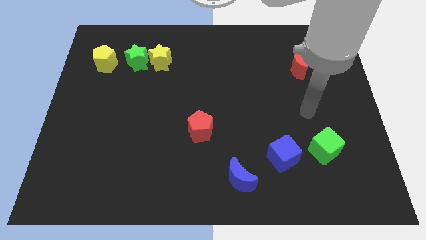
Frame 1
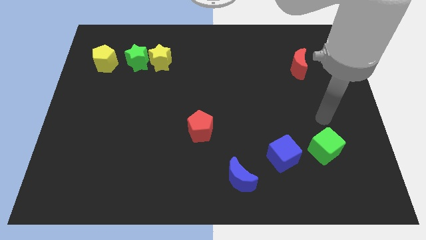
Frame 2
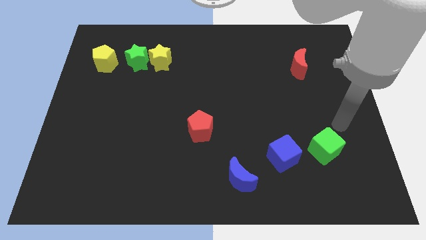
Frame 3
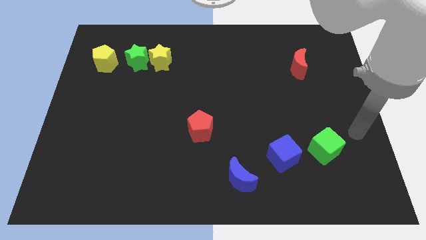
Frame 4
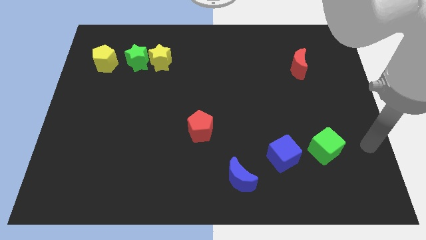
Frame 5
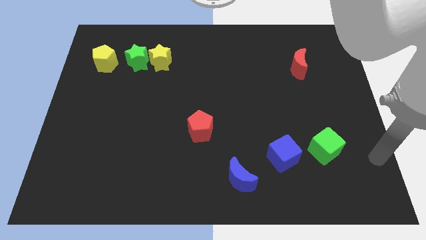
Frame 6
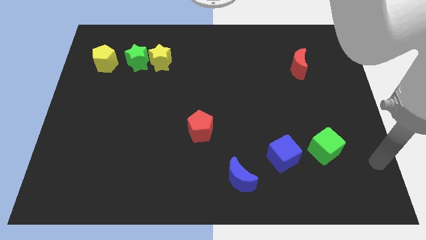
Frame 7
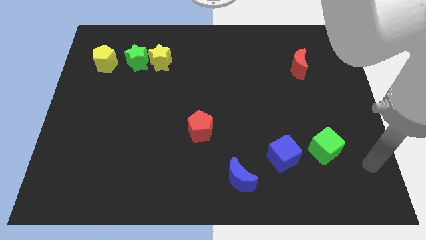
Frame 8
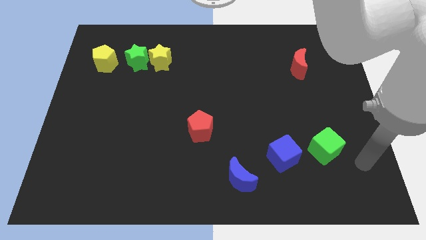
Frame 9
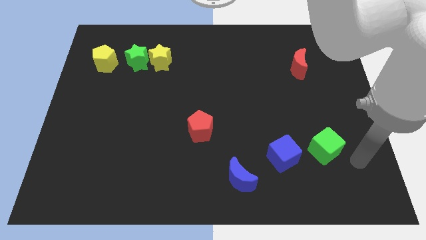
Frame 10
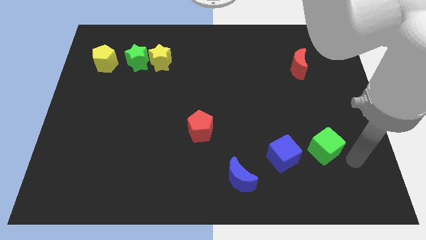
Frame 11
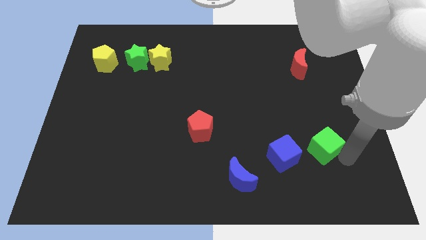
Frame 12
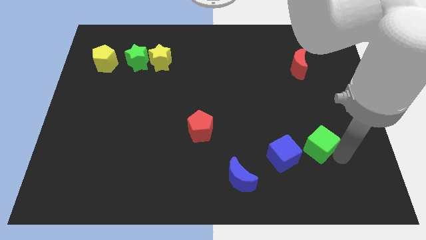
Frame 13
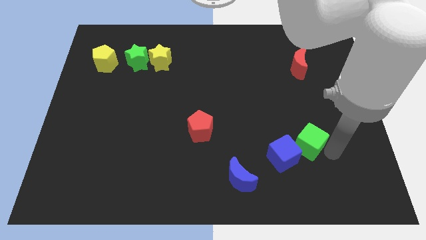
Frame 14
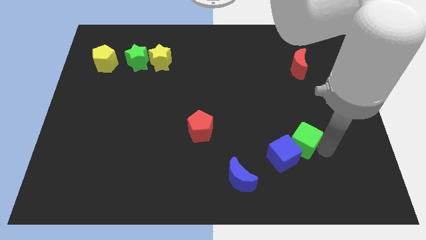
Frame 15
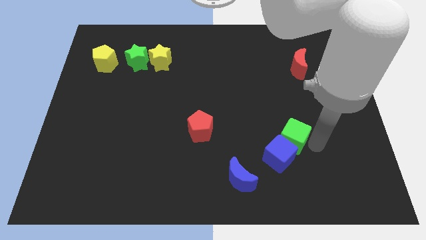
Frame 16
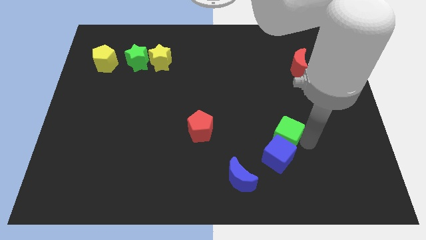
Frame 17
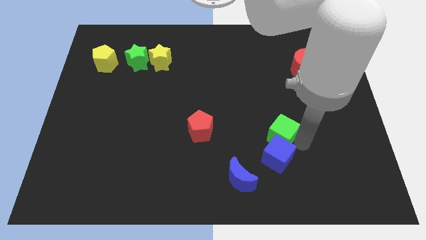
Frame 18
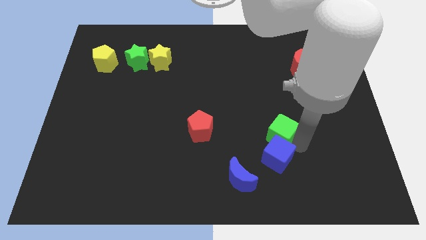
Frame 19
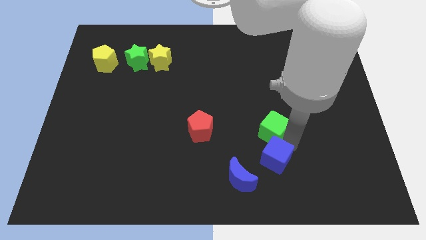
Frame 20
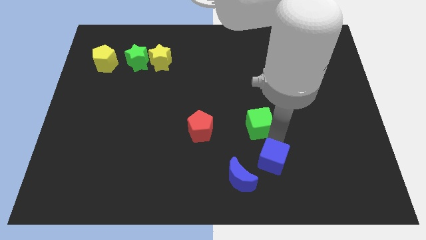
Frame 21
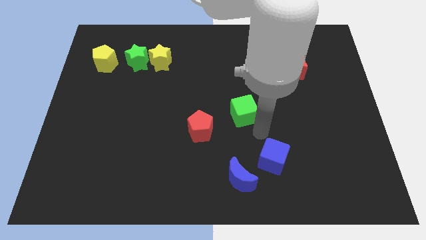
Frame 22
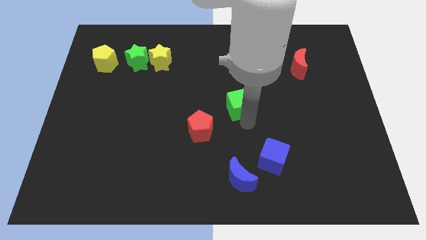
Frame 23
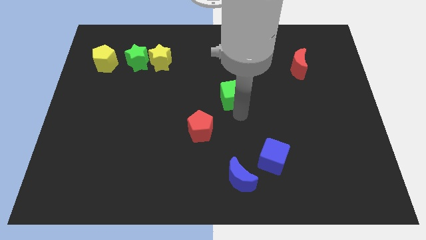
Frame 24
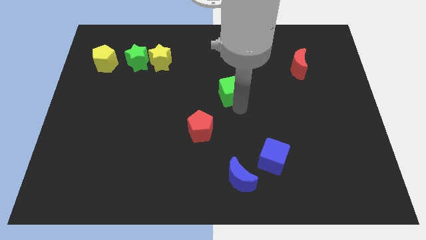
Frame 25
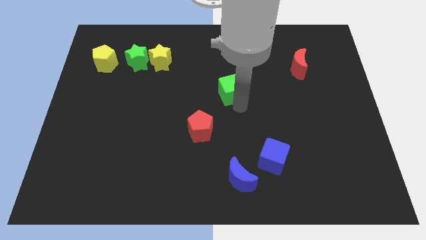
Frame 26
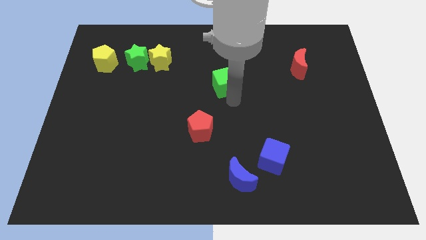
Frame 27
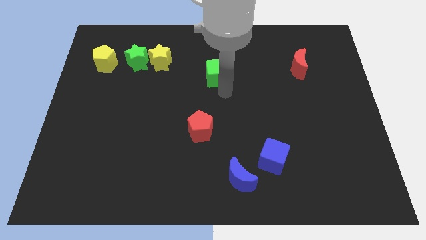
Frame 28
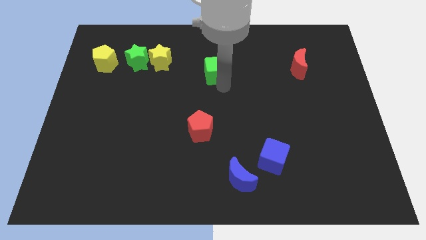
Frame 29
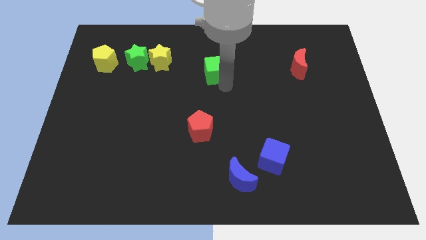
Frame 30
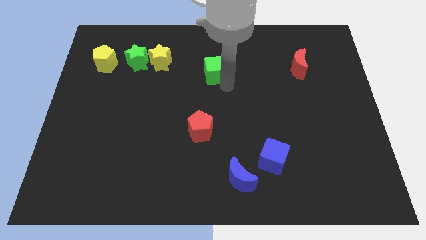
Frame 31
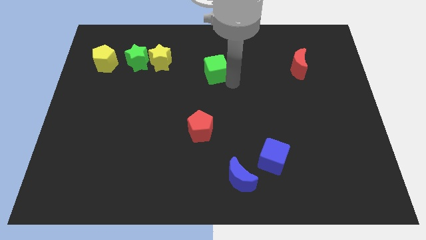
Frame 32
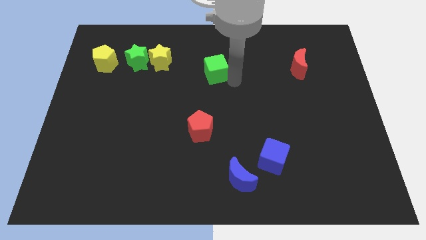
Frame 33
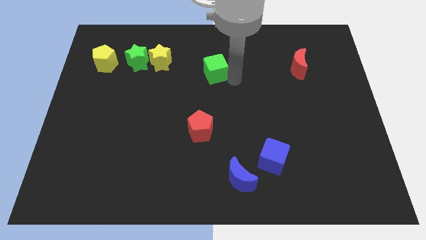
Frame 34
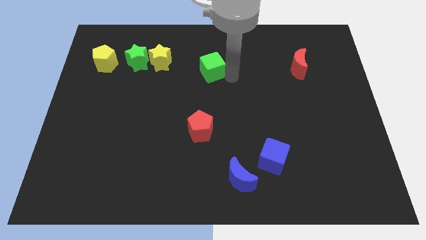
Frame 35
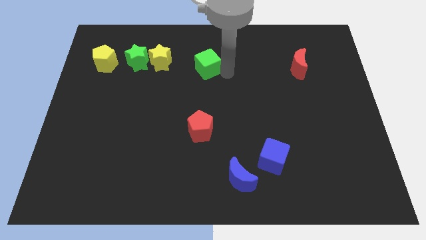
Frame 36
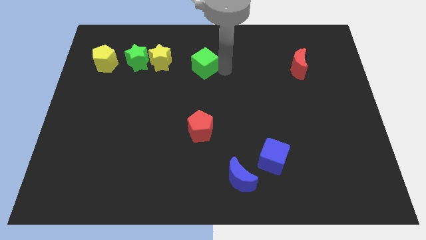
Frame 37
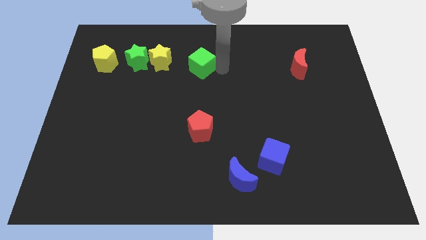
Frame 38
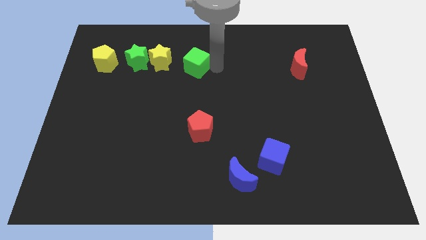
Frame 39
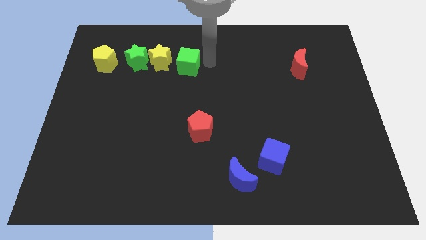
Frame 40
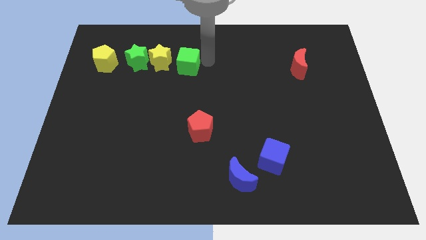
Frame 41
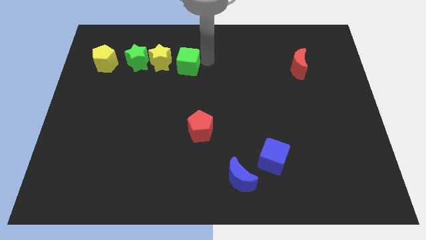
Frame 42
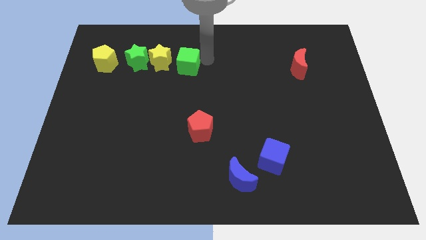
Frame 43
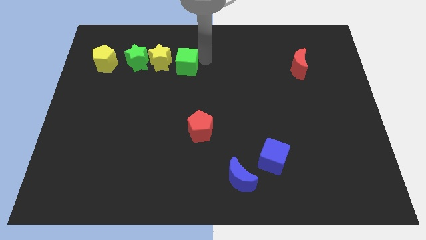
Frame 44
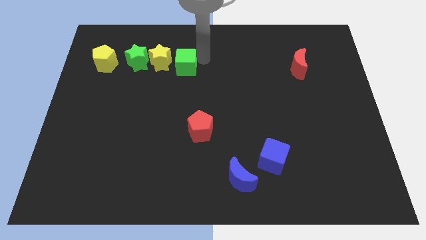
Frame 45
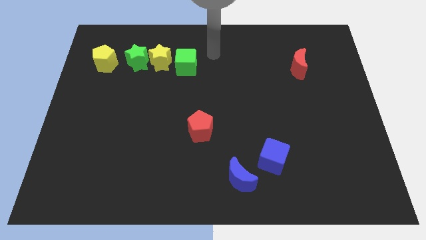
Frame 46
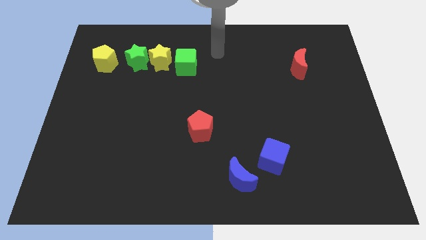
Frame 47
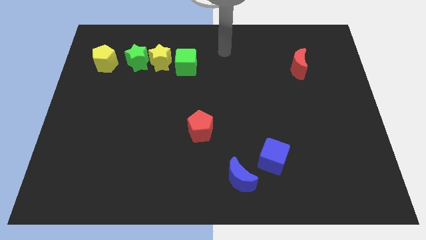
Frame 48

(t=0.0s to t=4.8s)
push the green cube to the right side of the yellow star

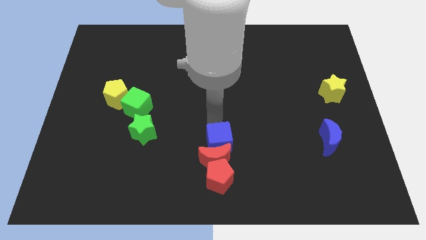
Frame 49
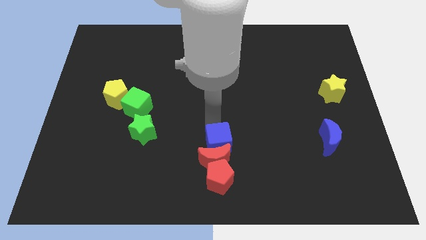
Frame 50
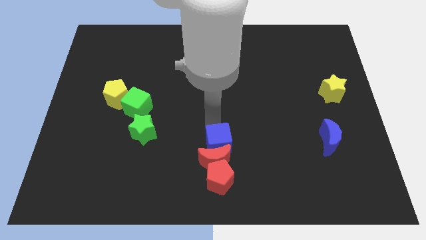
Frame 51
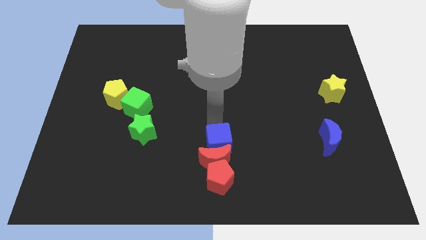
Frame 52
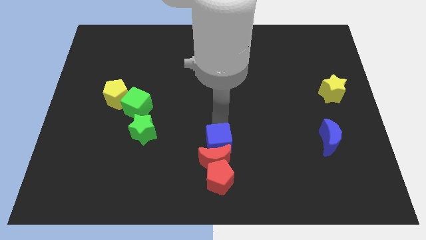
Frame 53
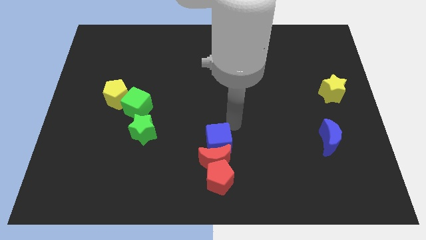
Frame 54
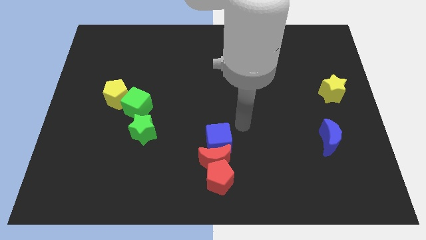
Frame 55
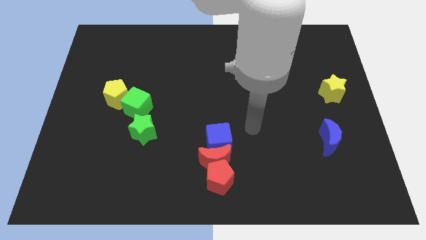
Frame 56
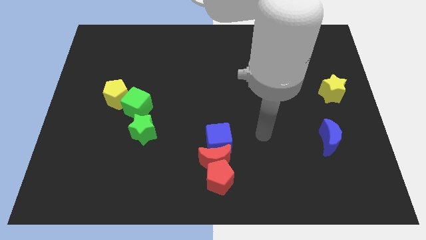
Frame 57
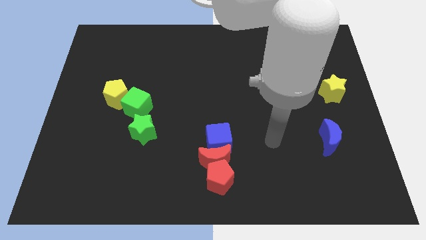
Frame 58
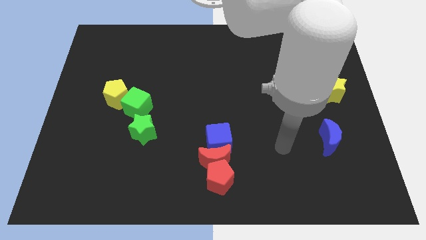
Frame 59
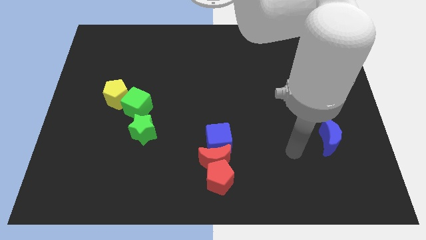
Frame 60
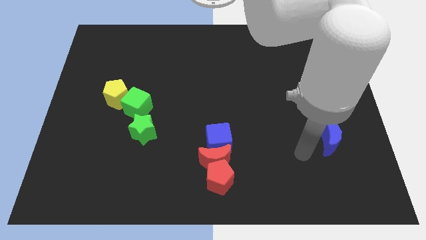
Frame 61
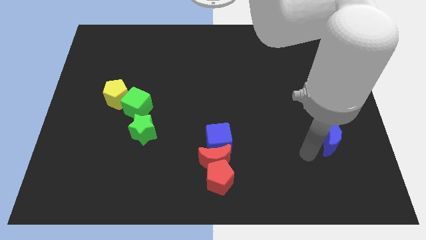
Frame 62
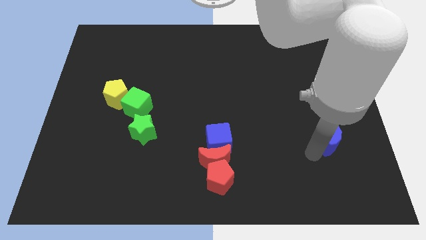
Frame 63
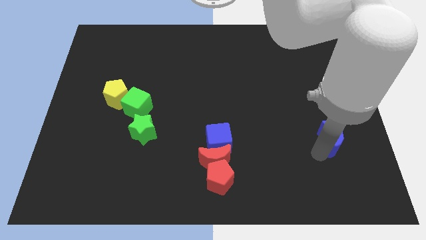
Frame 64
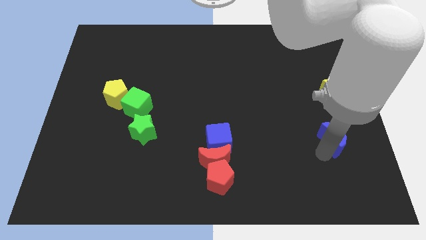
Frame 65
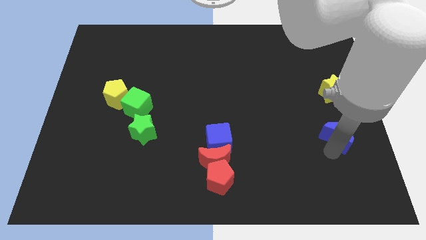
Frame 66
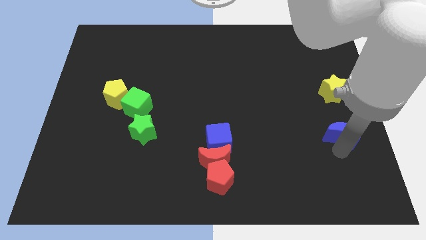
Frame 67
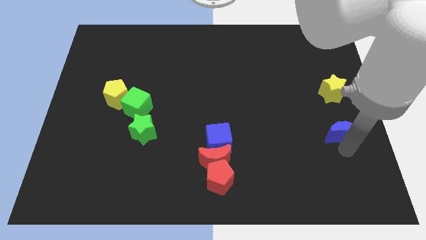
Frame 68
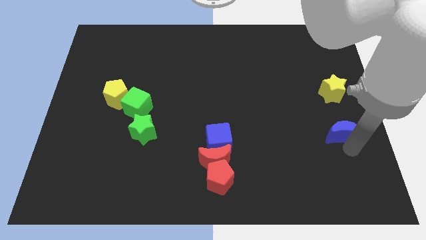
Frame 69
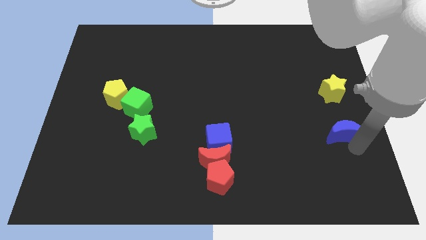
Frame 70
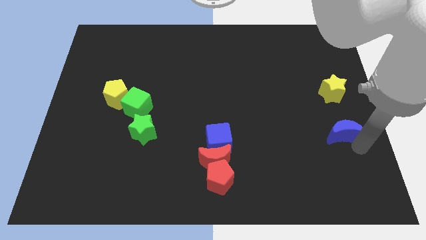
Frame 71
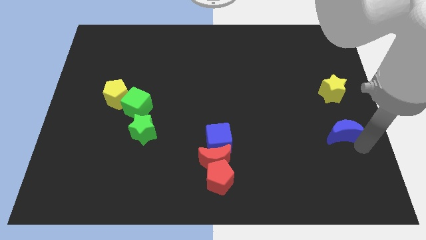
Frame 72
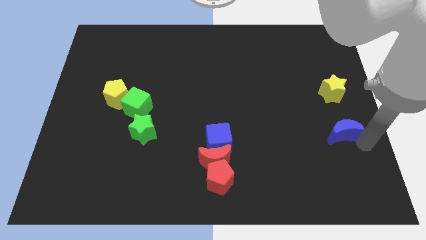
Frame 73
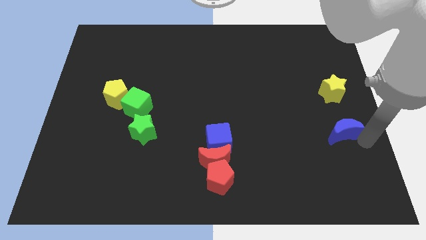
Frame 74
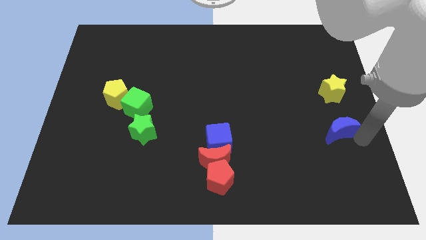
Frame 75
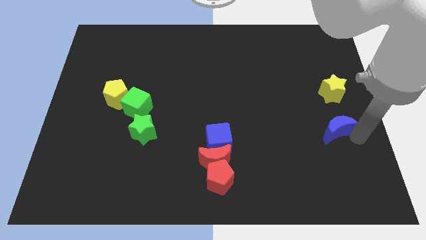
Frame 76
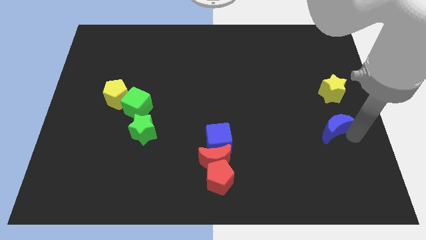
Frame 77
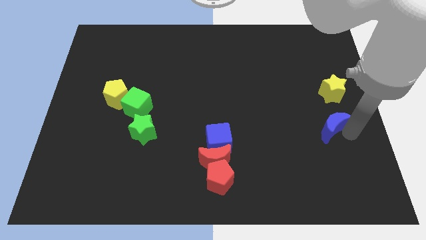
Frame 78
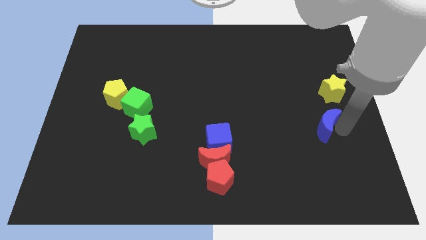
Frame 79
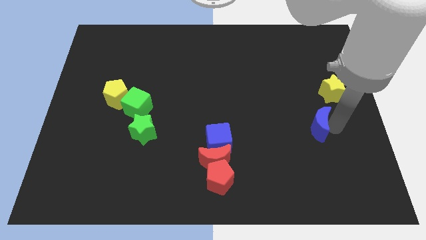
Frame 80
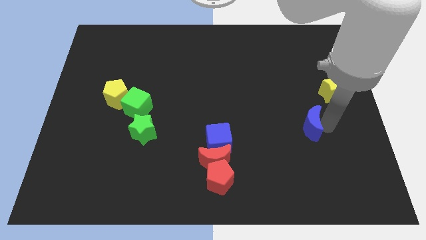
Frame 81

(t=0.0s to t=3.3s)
place blue moon to the bottom left of the yellow star

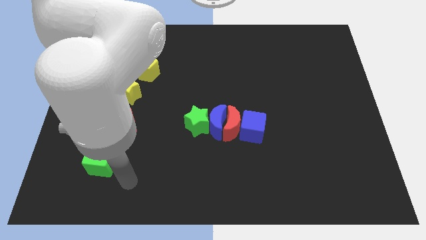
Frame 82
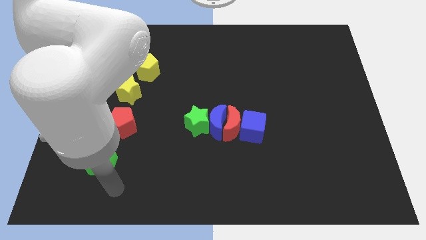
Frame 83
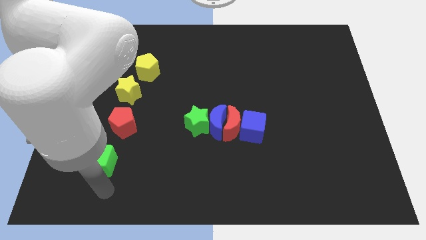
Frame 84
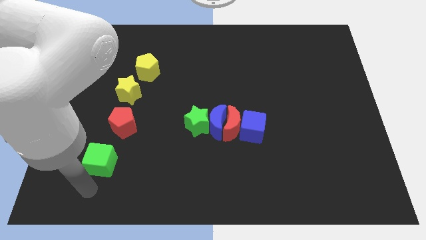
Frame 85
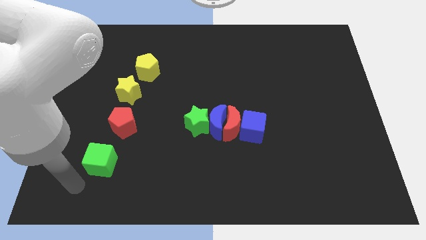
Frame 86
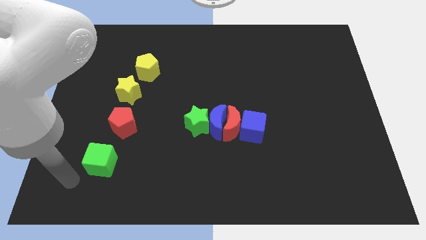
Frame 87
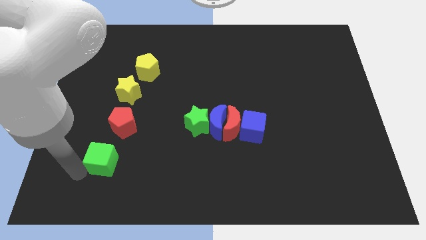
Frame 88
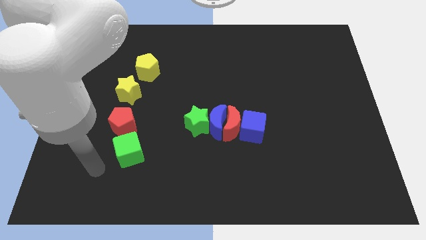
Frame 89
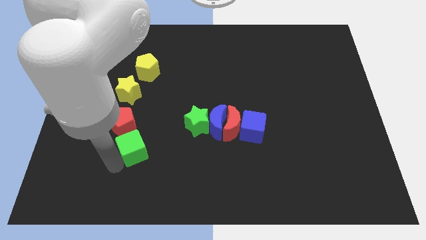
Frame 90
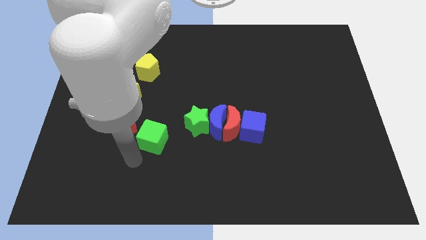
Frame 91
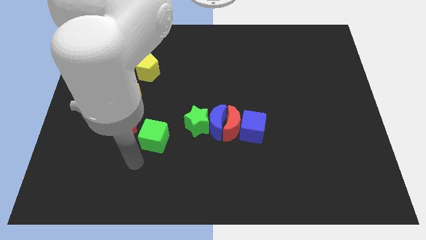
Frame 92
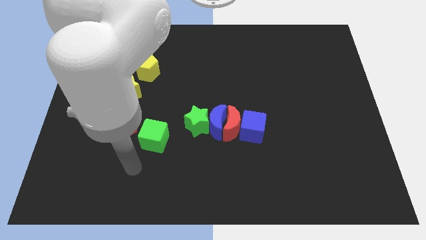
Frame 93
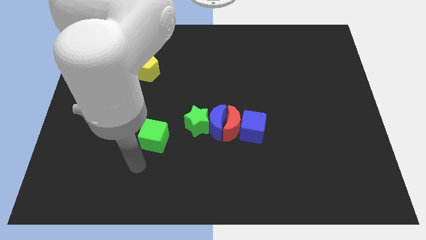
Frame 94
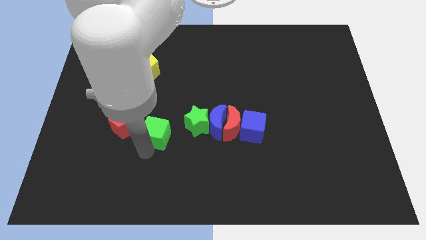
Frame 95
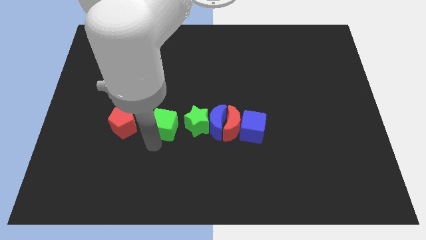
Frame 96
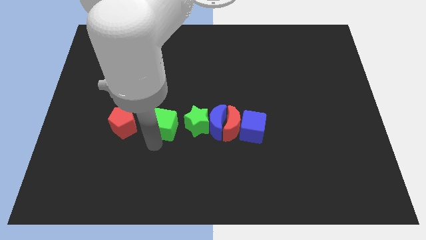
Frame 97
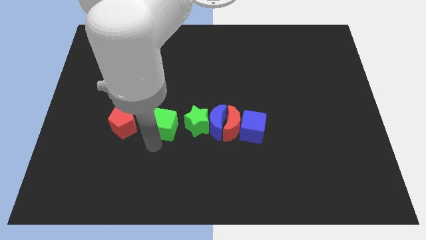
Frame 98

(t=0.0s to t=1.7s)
push green cube left to the green star
